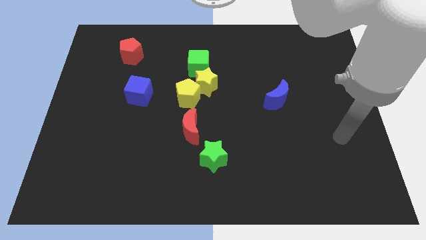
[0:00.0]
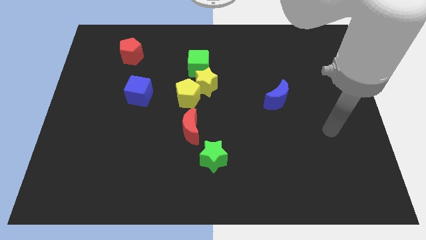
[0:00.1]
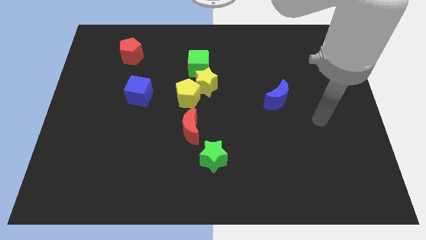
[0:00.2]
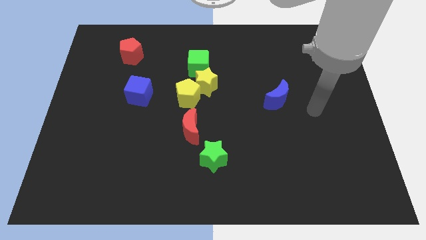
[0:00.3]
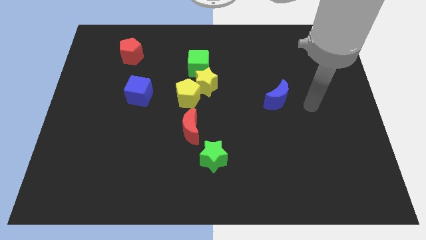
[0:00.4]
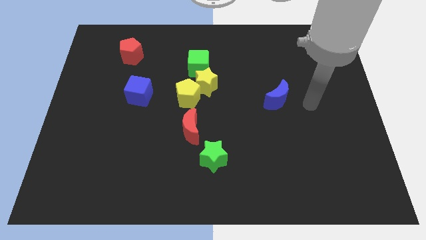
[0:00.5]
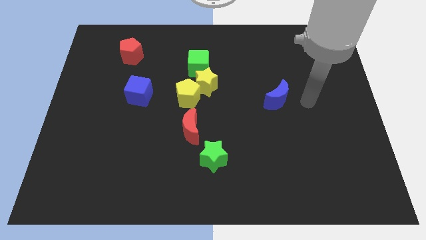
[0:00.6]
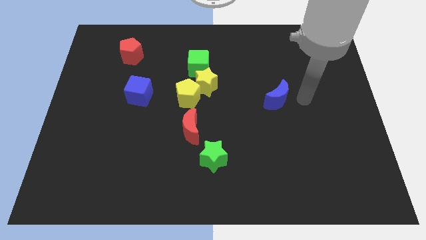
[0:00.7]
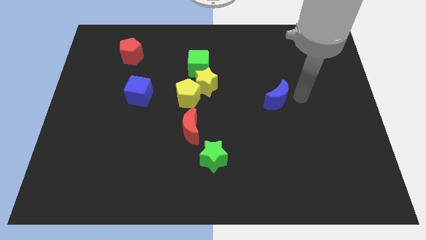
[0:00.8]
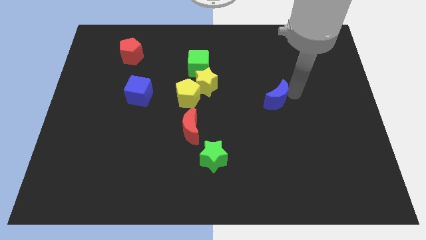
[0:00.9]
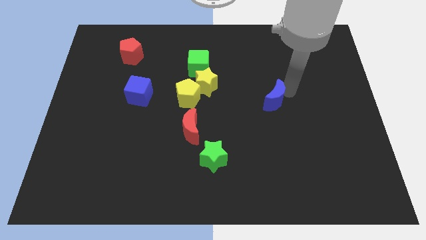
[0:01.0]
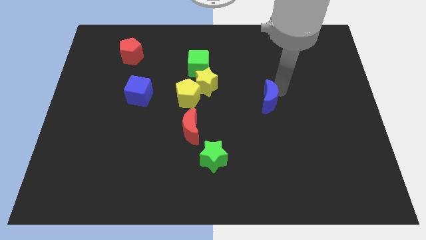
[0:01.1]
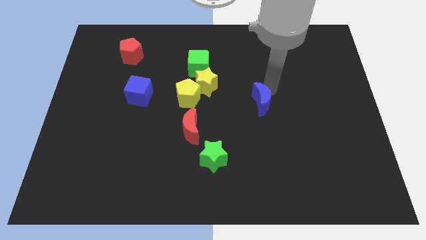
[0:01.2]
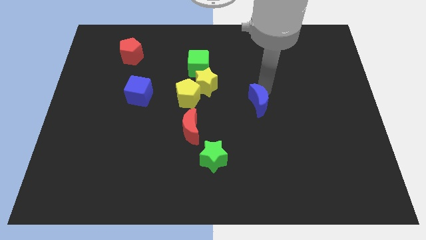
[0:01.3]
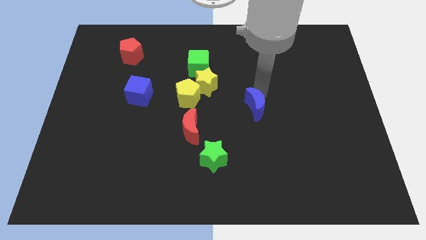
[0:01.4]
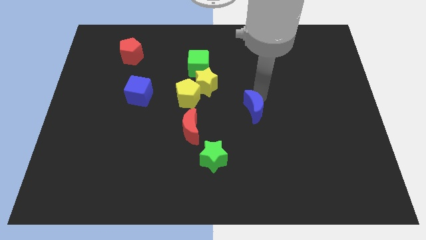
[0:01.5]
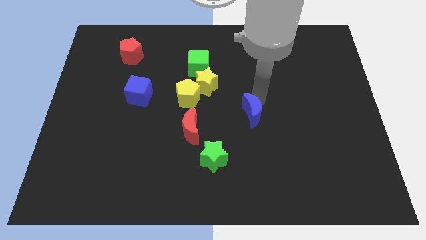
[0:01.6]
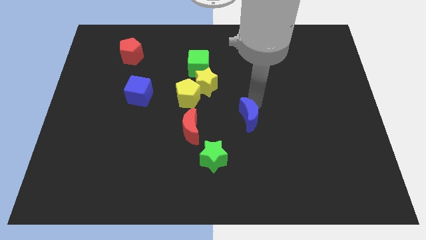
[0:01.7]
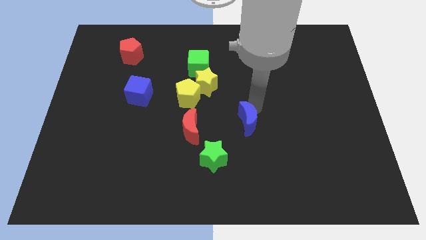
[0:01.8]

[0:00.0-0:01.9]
place the blue moon diagonal to the yellow star

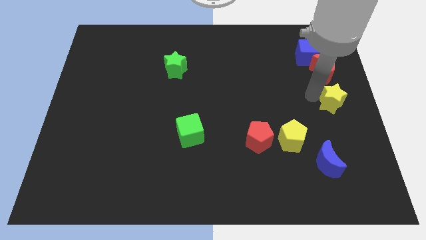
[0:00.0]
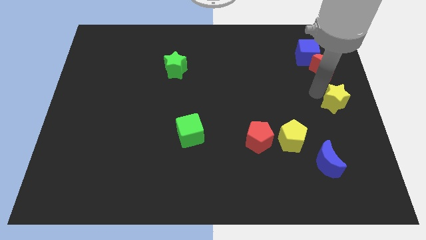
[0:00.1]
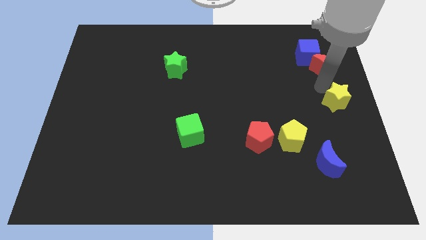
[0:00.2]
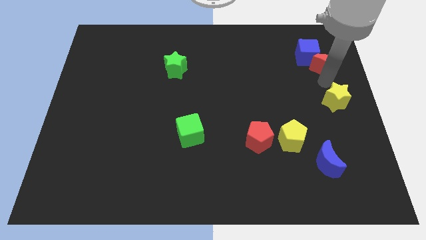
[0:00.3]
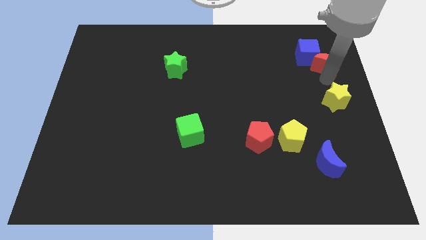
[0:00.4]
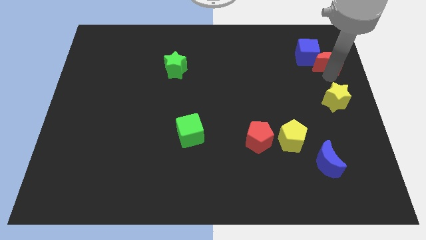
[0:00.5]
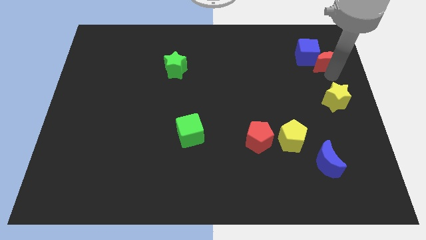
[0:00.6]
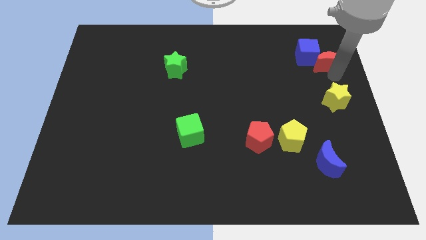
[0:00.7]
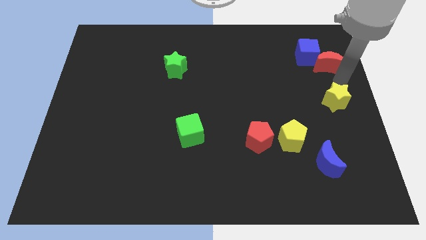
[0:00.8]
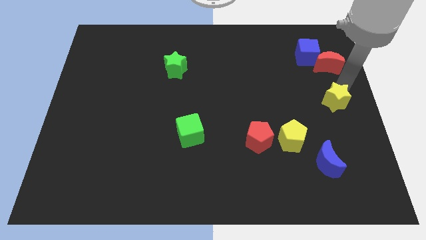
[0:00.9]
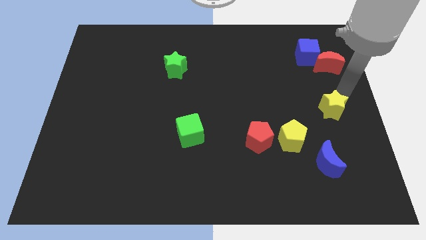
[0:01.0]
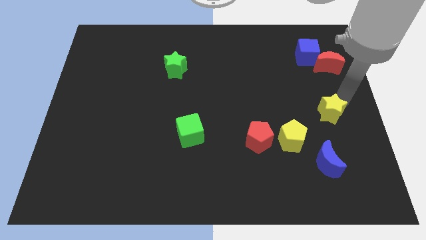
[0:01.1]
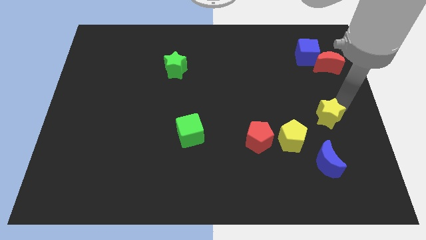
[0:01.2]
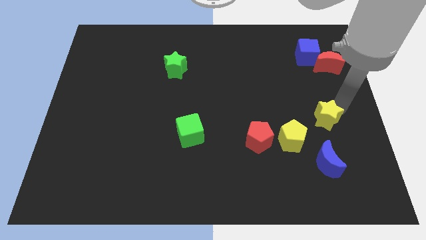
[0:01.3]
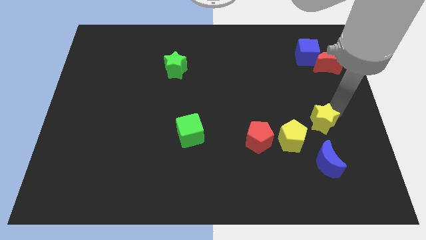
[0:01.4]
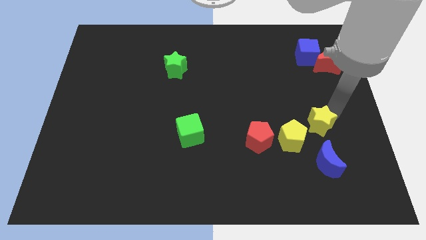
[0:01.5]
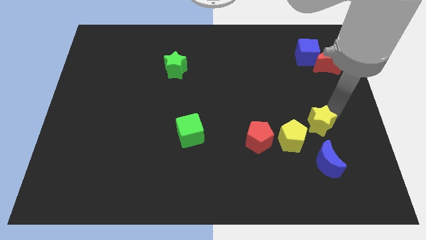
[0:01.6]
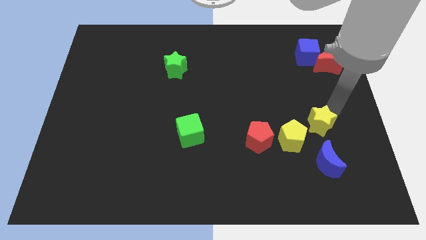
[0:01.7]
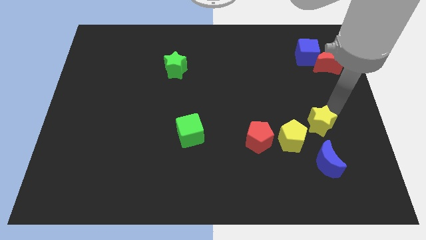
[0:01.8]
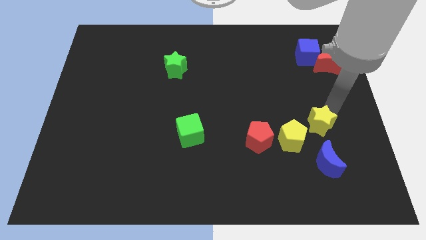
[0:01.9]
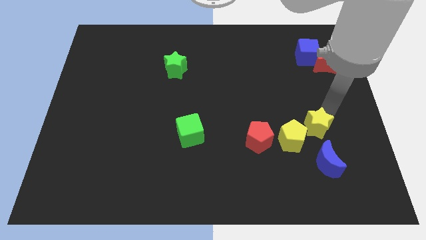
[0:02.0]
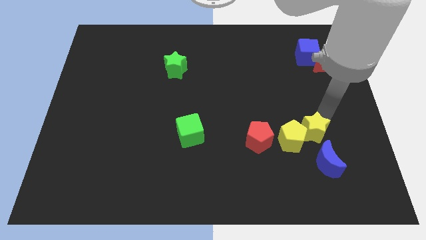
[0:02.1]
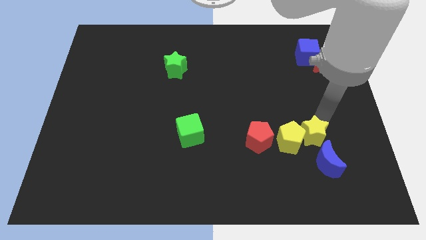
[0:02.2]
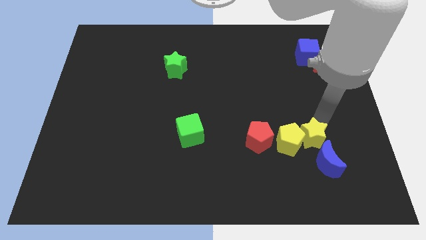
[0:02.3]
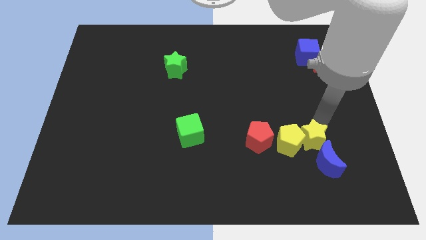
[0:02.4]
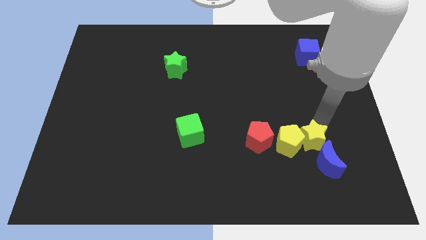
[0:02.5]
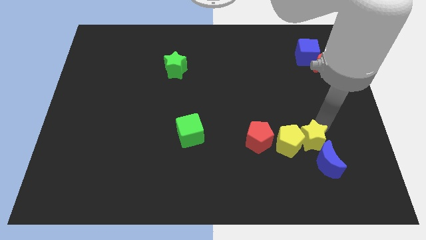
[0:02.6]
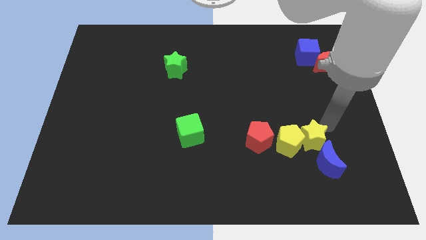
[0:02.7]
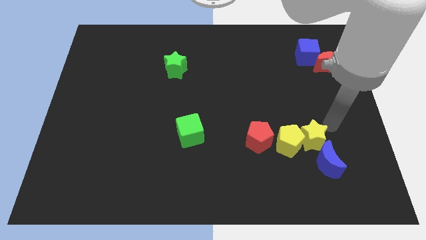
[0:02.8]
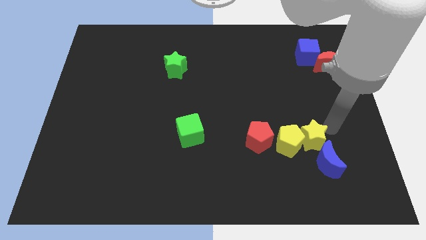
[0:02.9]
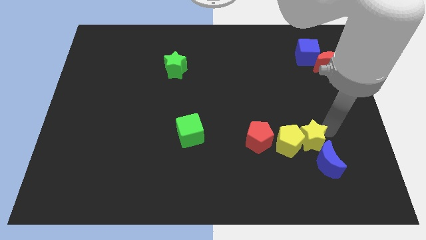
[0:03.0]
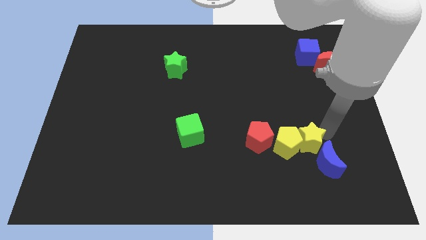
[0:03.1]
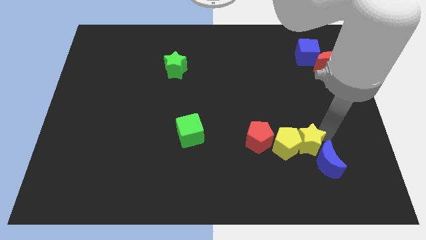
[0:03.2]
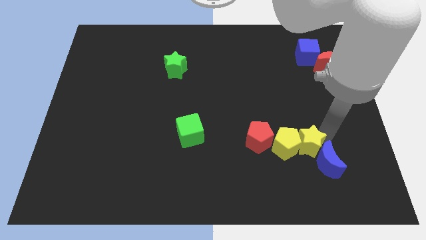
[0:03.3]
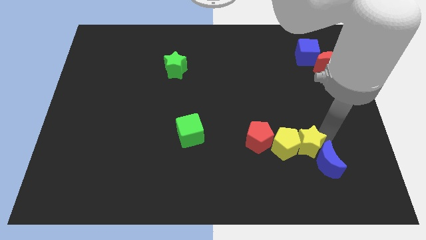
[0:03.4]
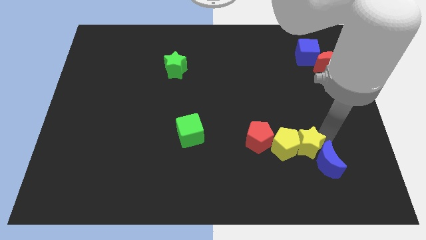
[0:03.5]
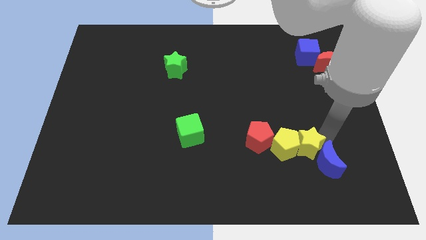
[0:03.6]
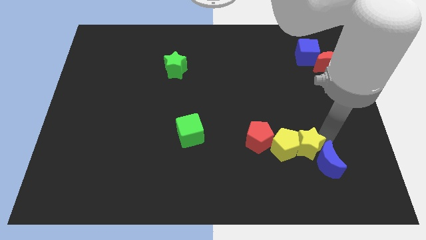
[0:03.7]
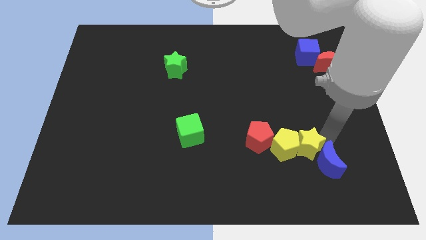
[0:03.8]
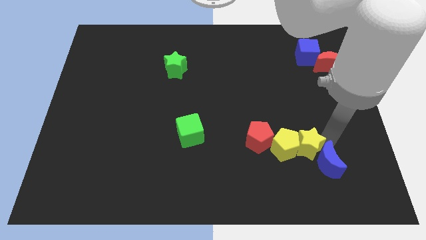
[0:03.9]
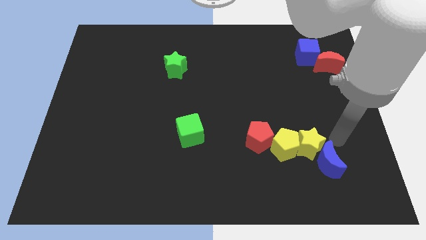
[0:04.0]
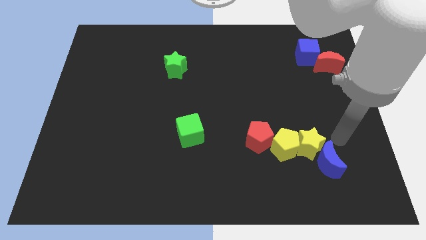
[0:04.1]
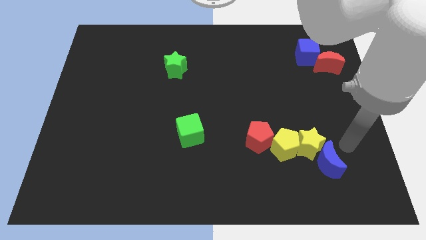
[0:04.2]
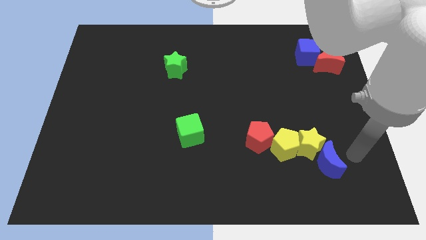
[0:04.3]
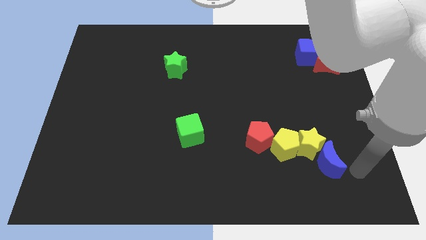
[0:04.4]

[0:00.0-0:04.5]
push the yellow star into the yellow pentagon

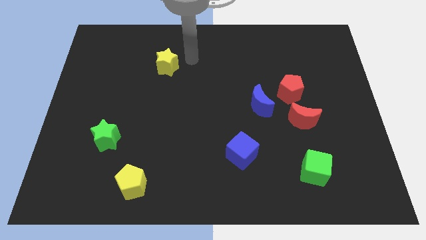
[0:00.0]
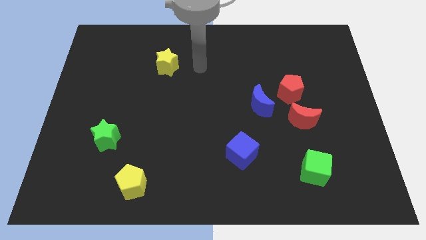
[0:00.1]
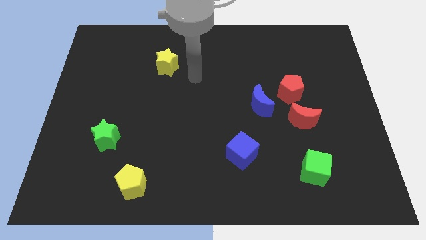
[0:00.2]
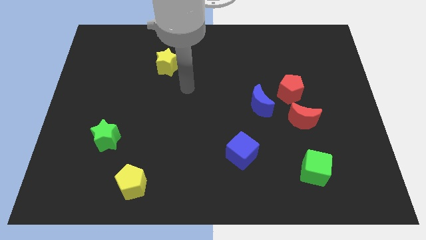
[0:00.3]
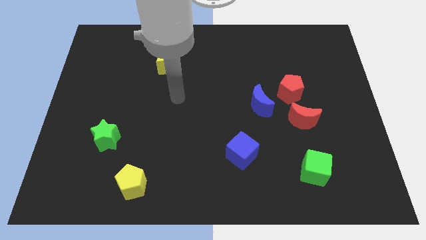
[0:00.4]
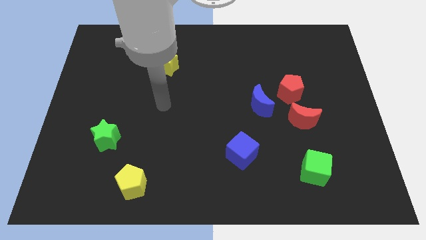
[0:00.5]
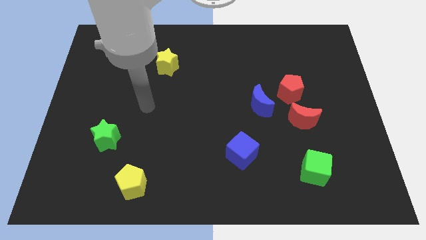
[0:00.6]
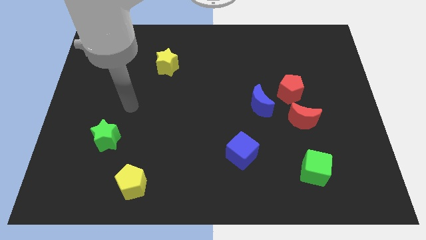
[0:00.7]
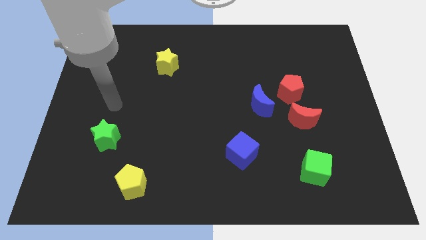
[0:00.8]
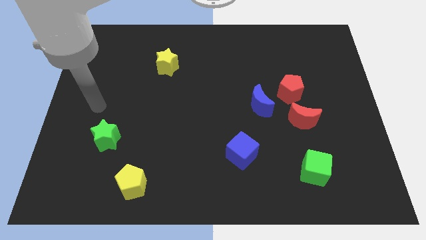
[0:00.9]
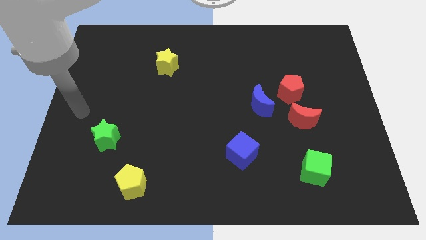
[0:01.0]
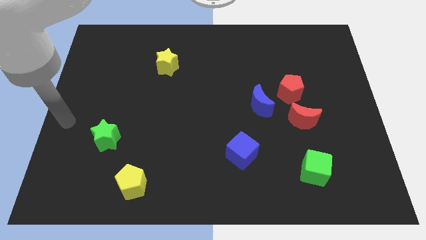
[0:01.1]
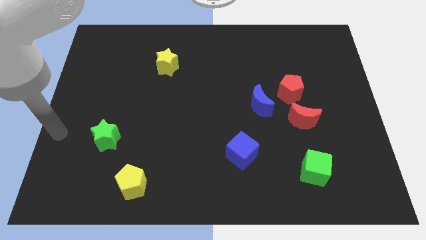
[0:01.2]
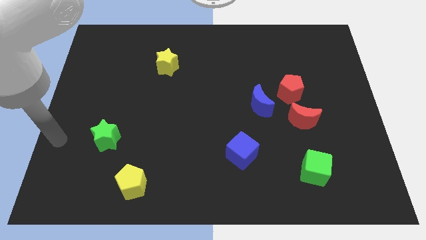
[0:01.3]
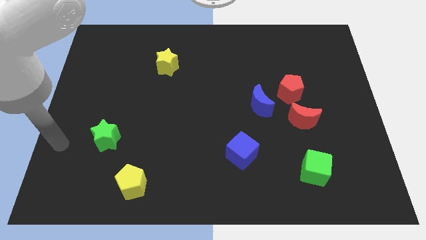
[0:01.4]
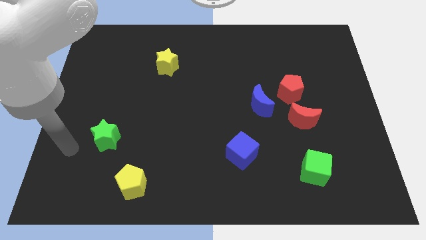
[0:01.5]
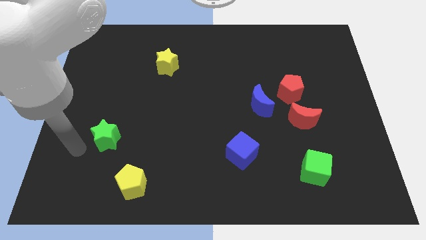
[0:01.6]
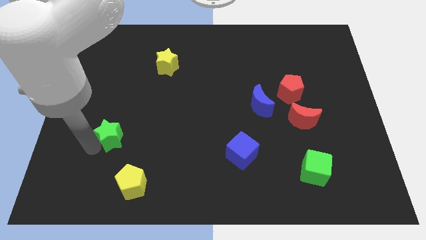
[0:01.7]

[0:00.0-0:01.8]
move your arm from the yellow star to the left side of the green star

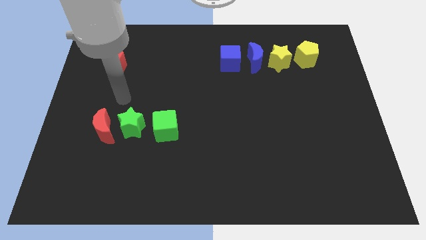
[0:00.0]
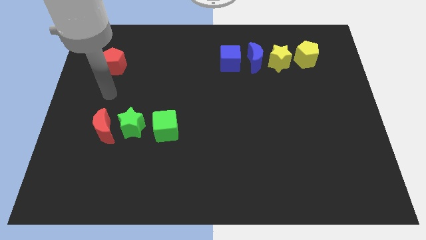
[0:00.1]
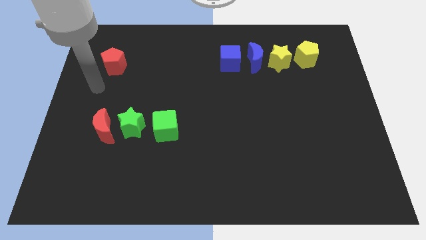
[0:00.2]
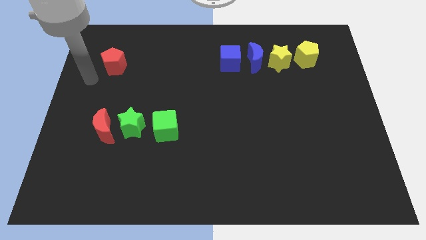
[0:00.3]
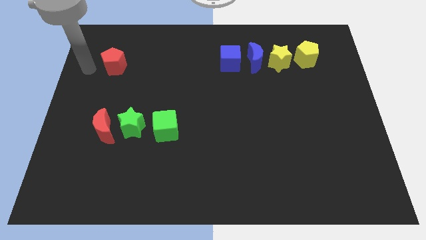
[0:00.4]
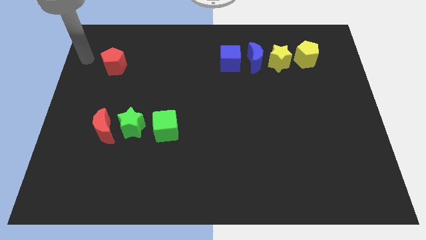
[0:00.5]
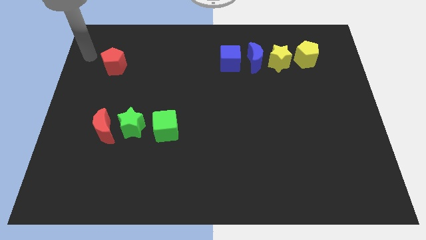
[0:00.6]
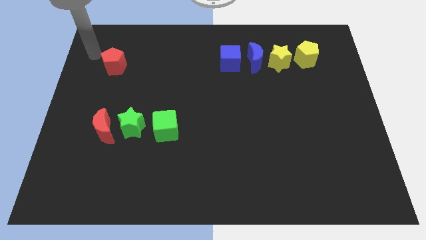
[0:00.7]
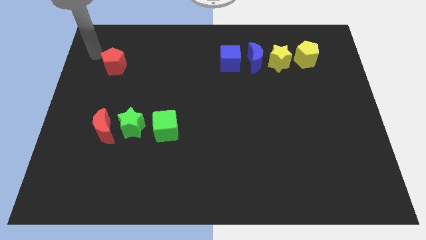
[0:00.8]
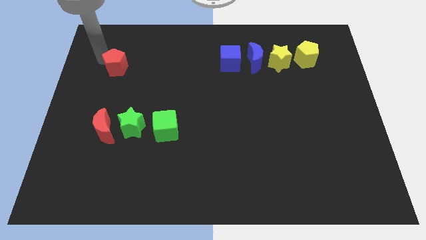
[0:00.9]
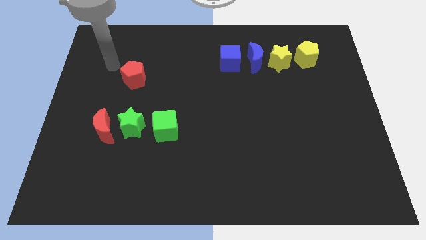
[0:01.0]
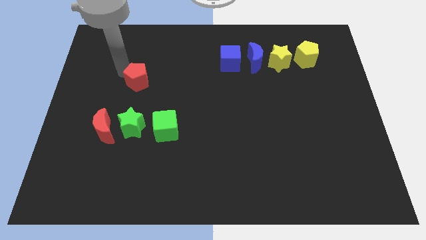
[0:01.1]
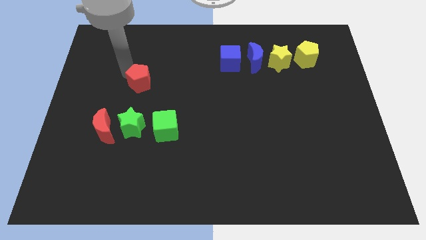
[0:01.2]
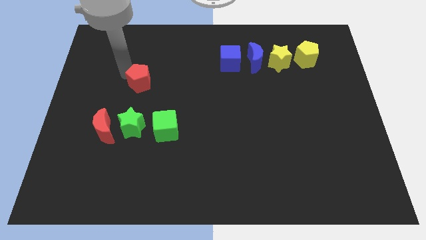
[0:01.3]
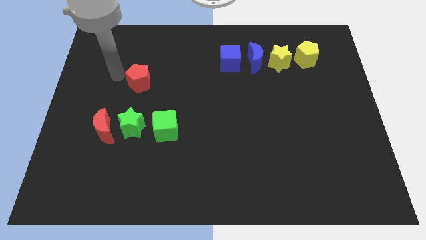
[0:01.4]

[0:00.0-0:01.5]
move the red pentagon above the green star
